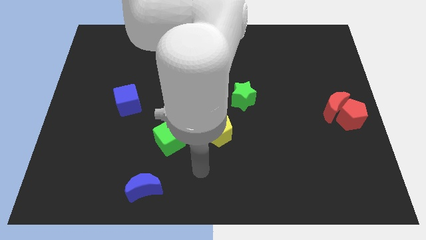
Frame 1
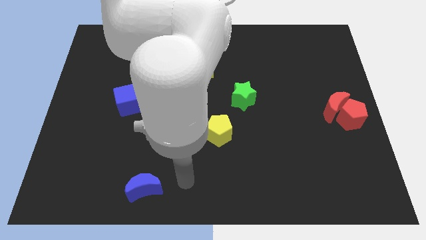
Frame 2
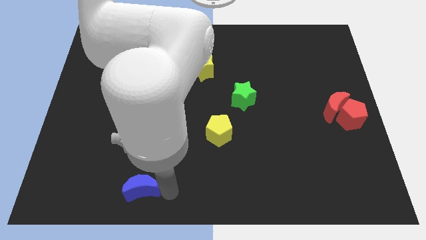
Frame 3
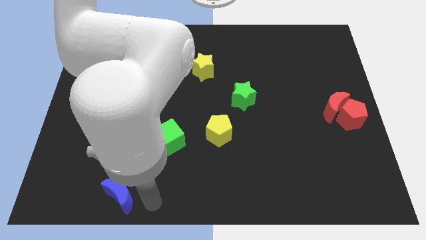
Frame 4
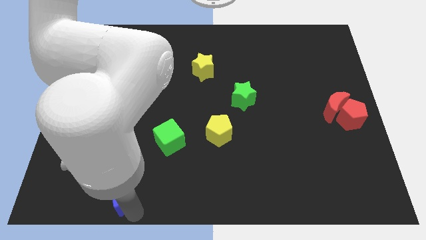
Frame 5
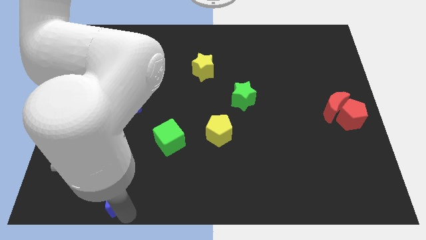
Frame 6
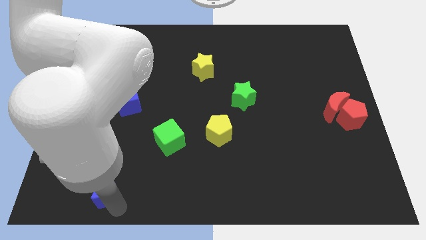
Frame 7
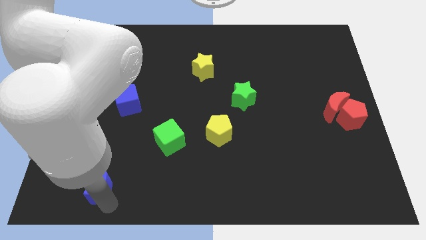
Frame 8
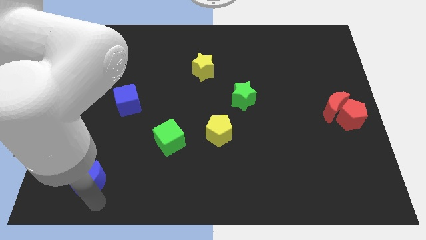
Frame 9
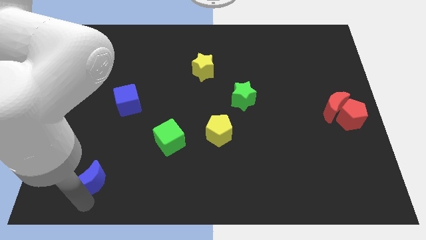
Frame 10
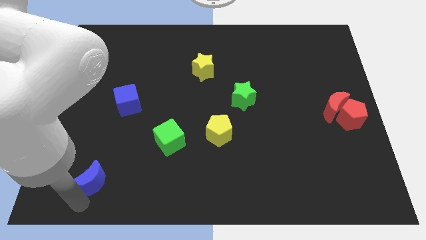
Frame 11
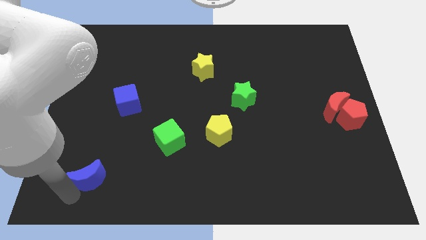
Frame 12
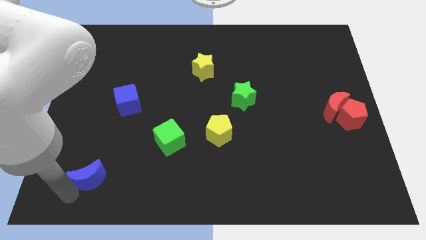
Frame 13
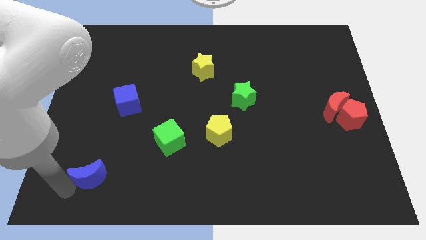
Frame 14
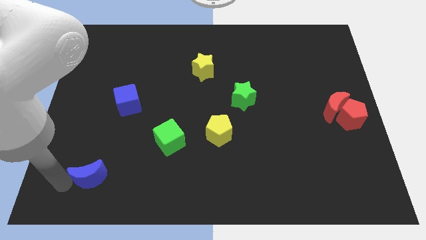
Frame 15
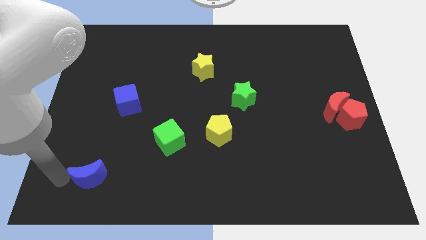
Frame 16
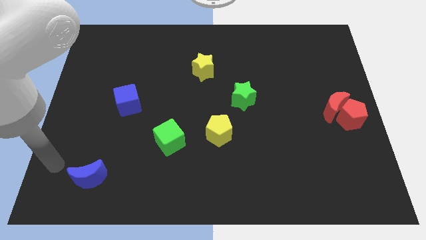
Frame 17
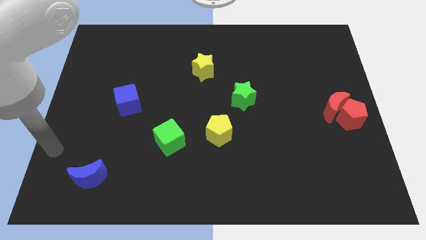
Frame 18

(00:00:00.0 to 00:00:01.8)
push the blue moon upwards slightly

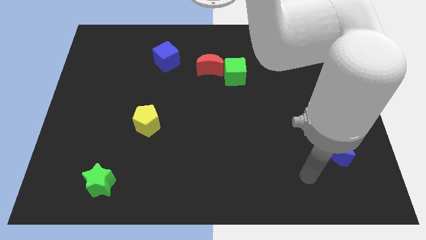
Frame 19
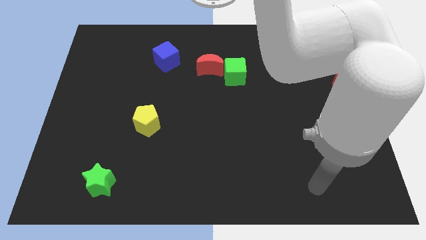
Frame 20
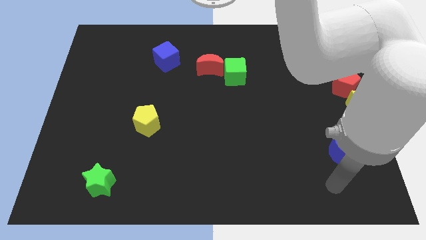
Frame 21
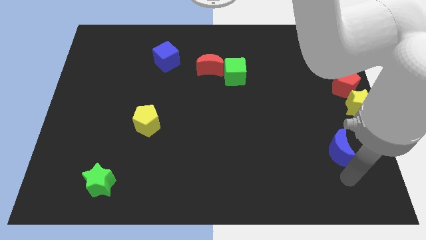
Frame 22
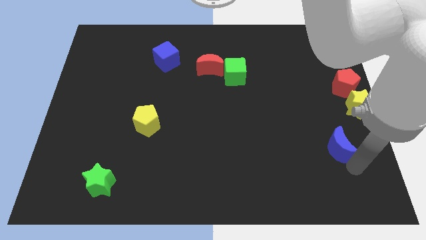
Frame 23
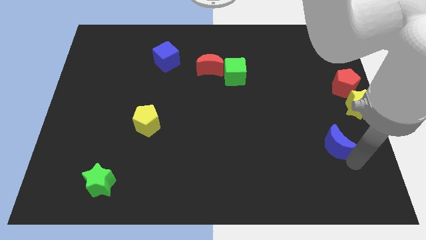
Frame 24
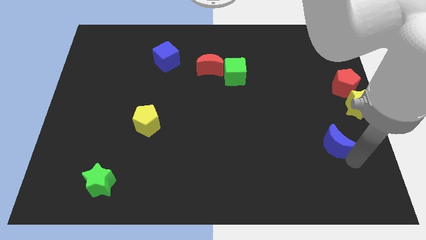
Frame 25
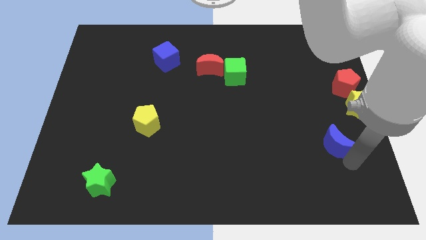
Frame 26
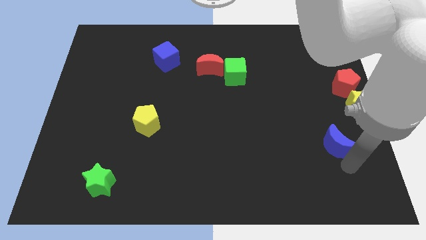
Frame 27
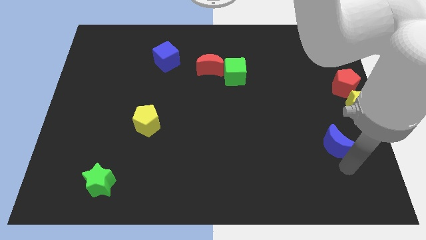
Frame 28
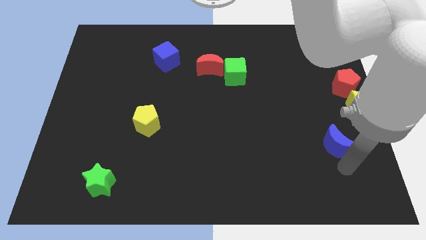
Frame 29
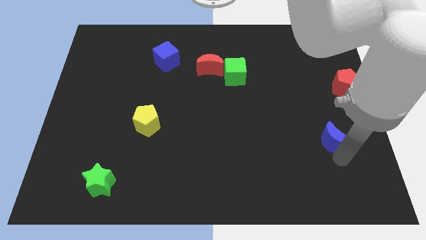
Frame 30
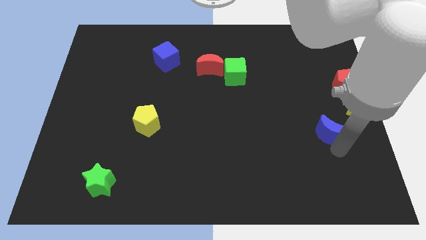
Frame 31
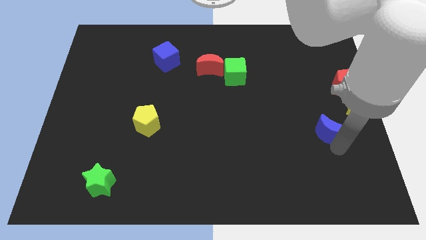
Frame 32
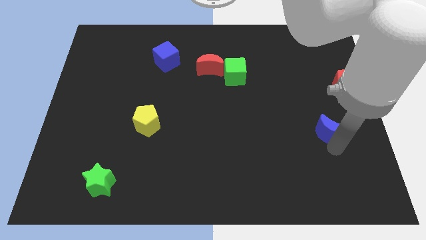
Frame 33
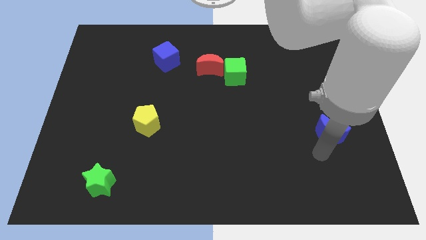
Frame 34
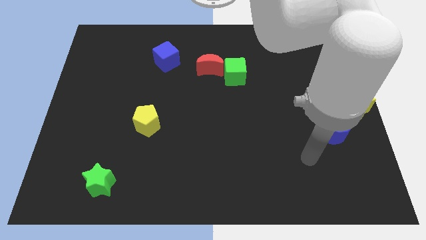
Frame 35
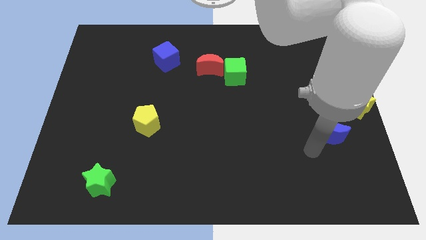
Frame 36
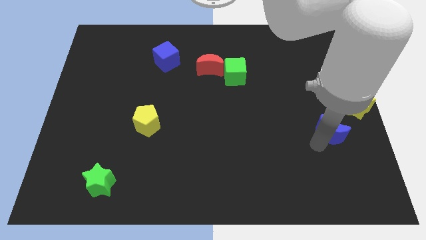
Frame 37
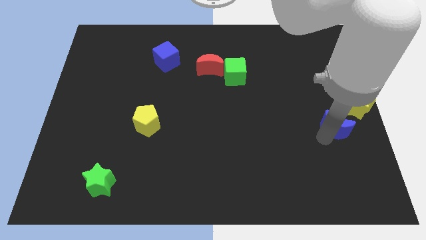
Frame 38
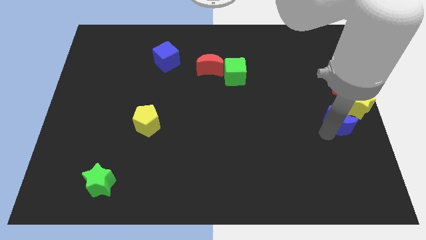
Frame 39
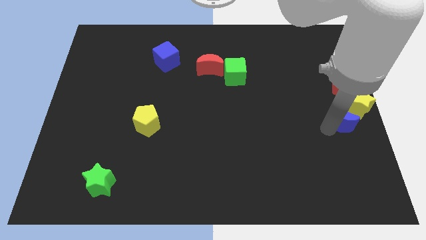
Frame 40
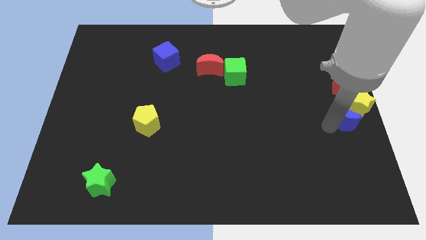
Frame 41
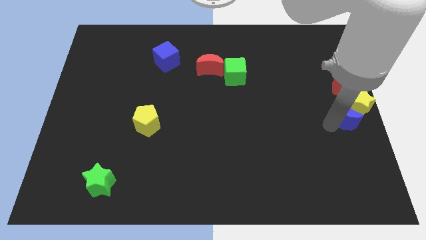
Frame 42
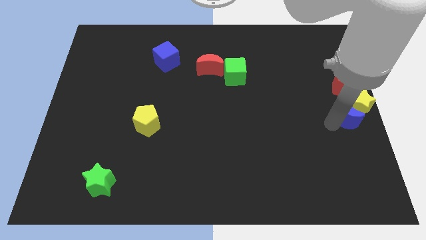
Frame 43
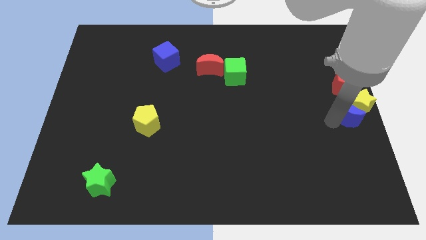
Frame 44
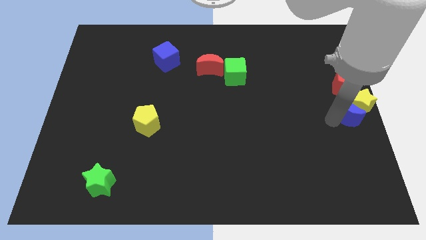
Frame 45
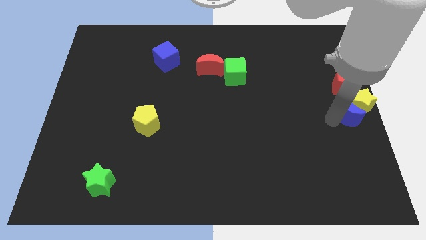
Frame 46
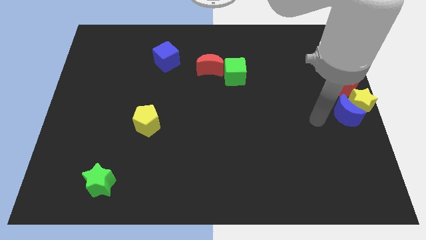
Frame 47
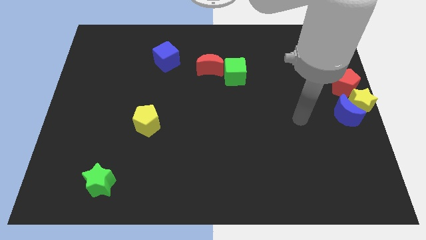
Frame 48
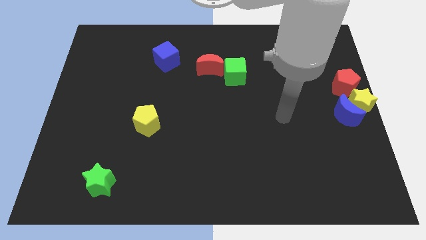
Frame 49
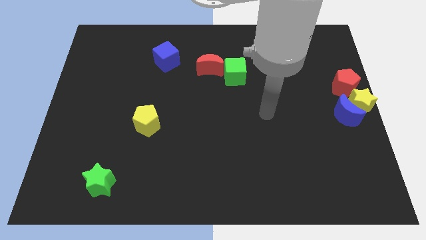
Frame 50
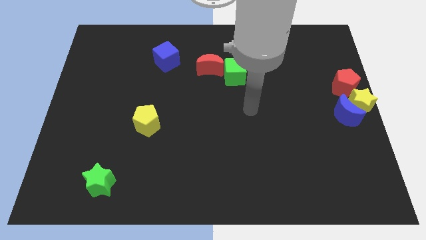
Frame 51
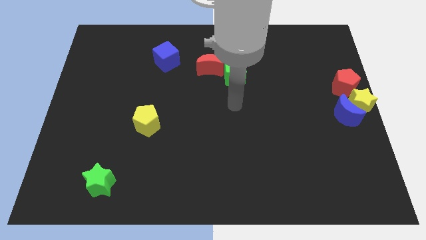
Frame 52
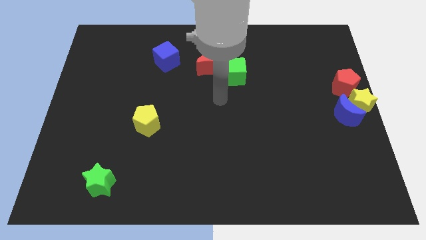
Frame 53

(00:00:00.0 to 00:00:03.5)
move the blue crescent into the yellow star

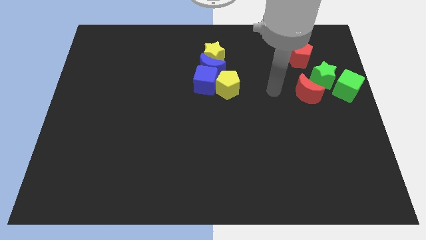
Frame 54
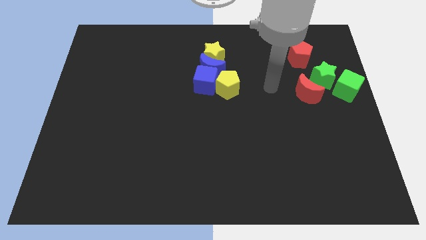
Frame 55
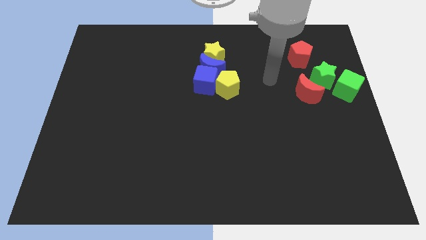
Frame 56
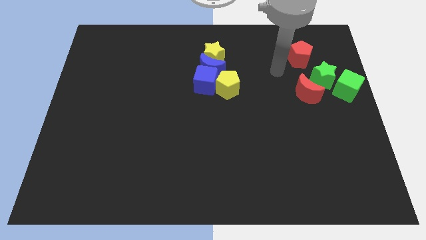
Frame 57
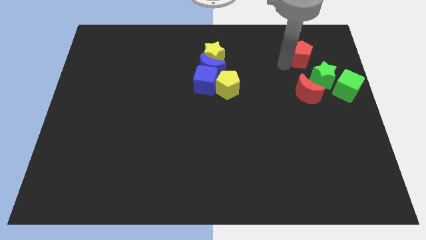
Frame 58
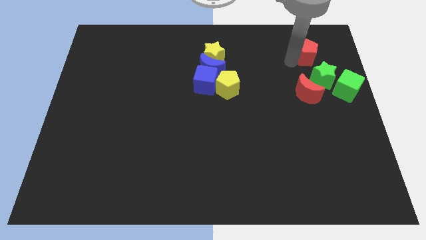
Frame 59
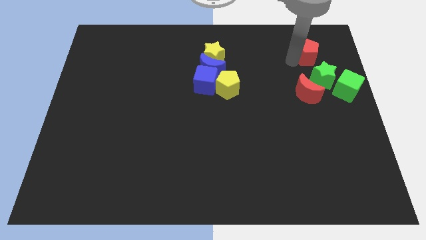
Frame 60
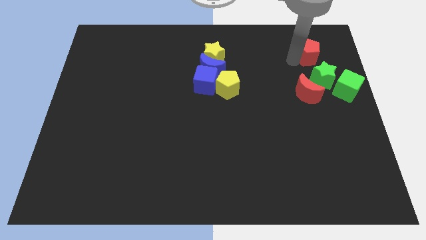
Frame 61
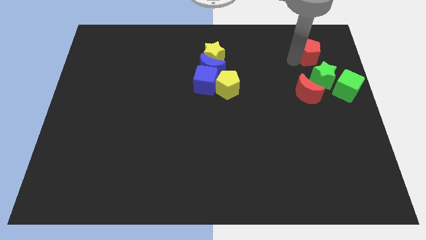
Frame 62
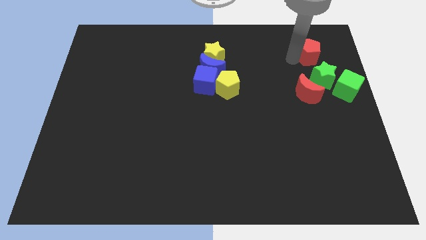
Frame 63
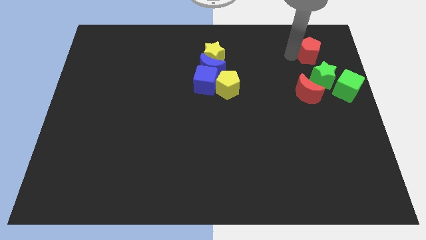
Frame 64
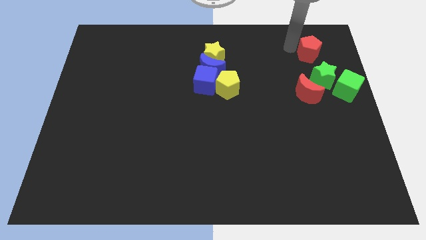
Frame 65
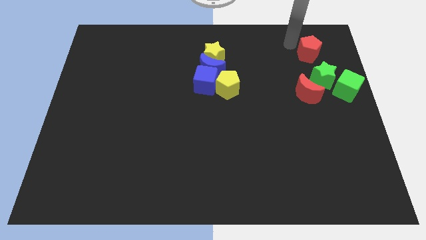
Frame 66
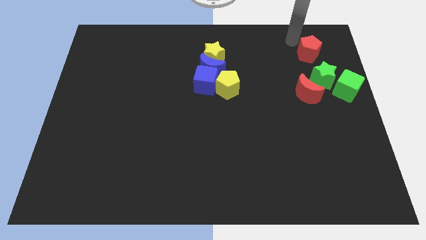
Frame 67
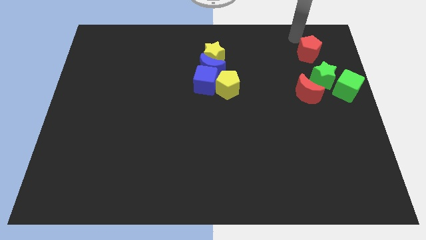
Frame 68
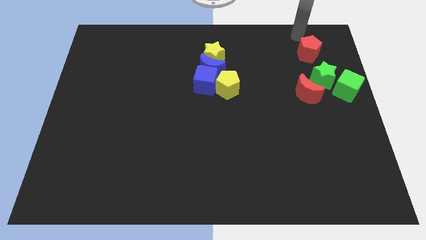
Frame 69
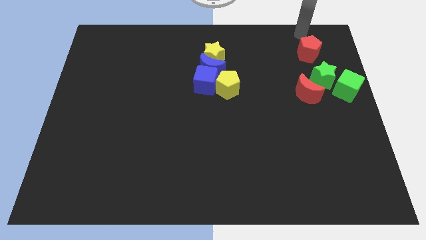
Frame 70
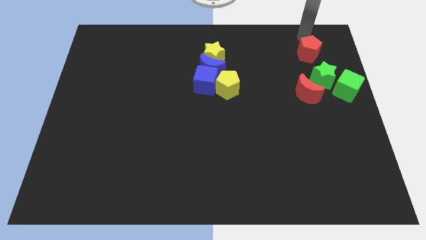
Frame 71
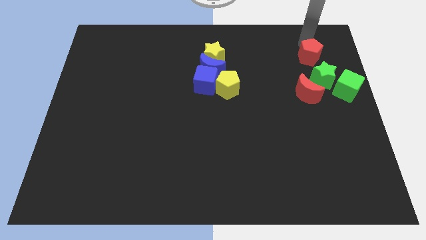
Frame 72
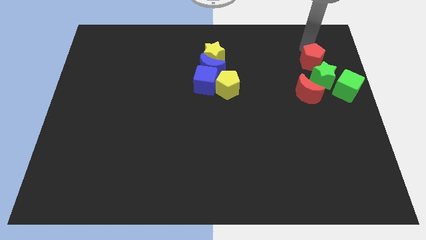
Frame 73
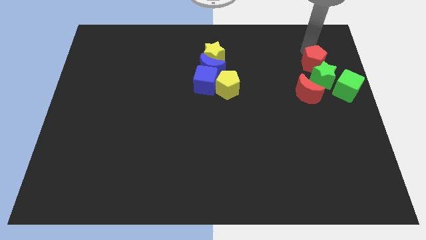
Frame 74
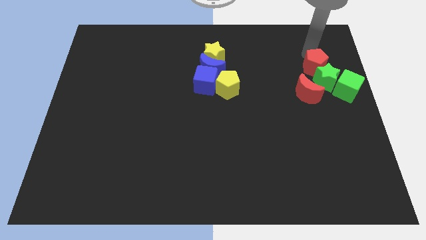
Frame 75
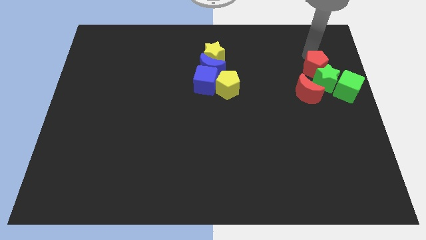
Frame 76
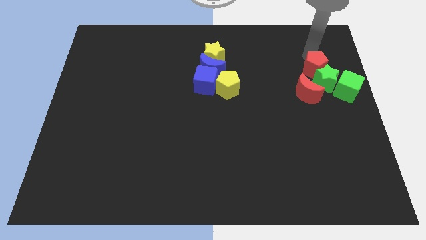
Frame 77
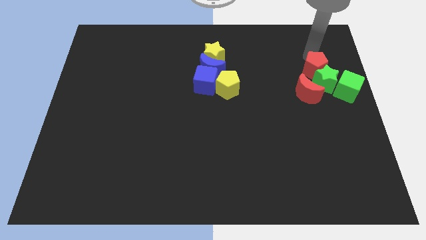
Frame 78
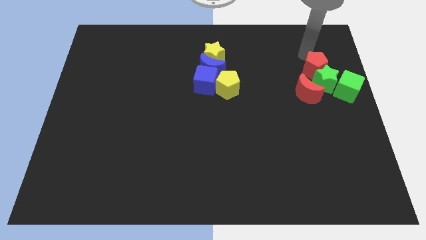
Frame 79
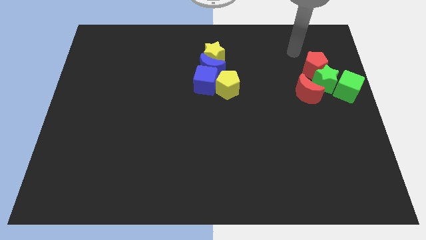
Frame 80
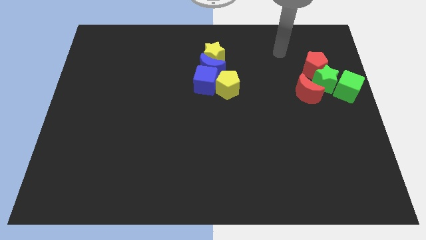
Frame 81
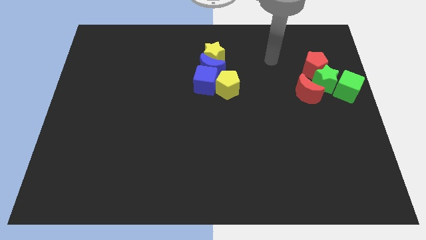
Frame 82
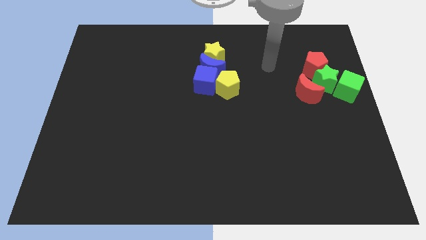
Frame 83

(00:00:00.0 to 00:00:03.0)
push the red pentagon above the green star

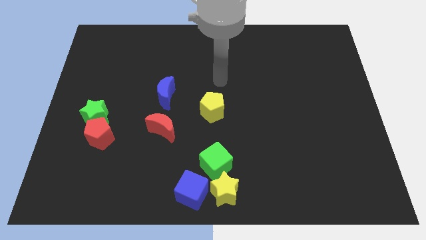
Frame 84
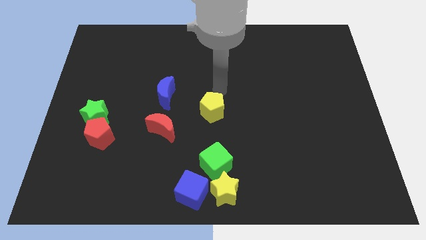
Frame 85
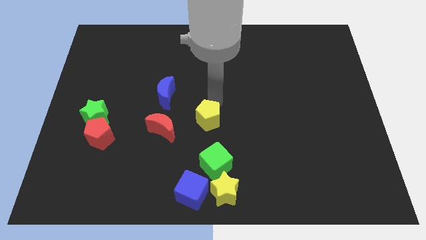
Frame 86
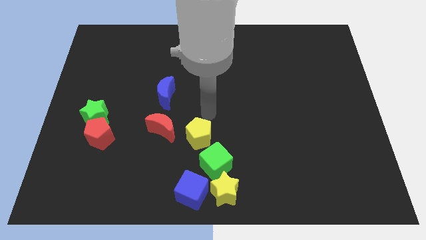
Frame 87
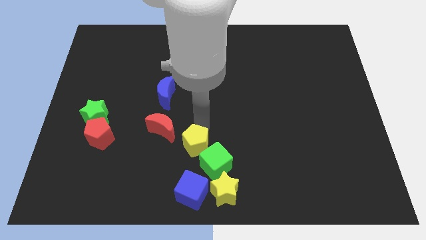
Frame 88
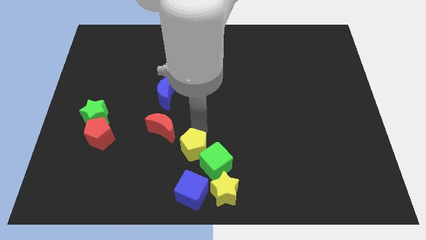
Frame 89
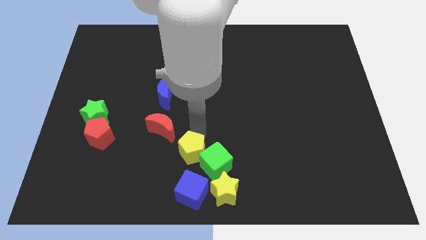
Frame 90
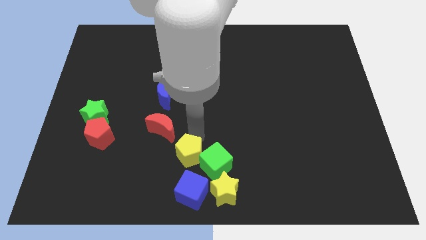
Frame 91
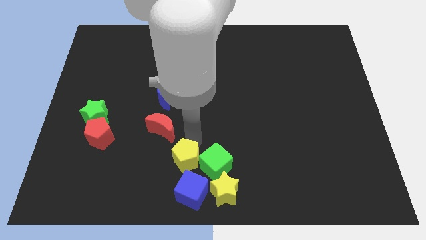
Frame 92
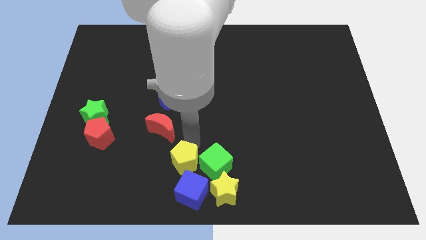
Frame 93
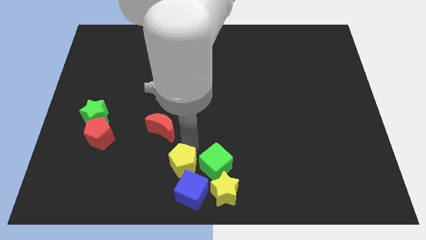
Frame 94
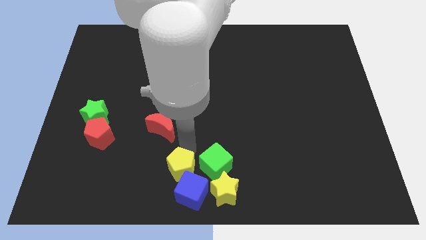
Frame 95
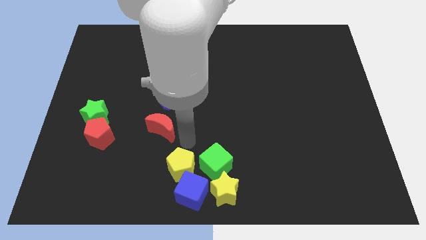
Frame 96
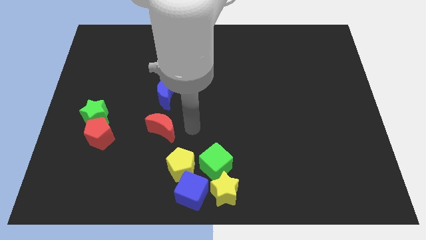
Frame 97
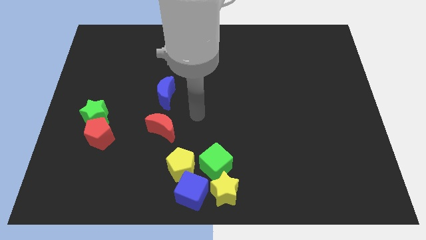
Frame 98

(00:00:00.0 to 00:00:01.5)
place the yellow pentagon left to the green cube
